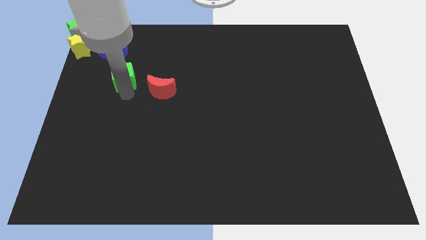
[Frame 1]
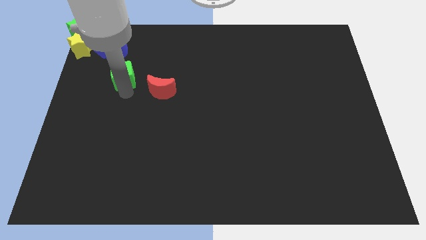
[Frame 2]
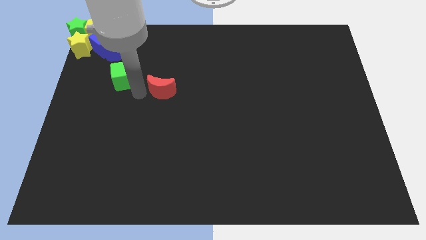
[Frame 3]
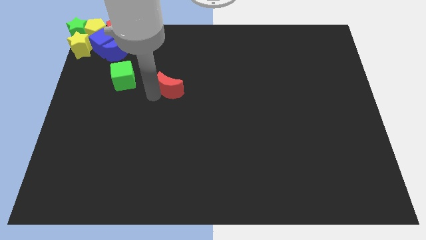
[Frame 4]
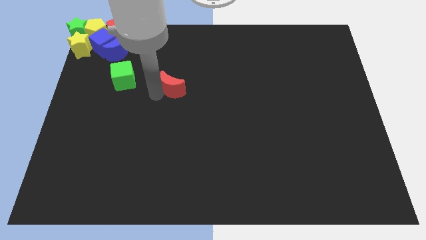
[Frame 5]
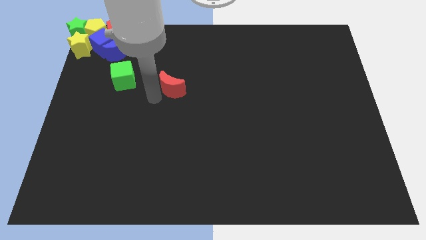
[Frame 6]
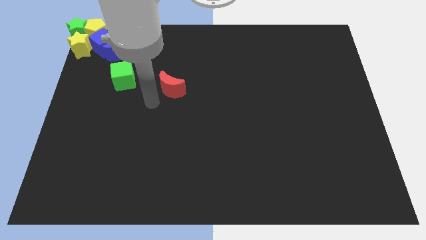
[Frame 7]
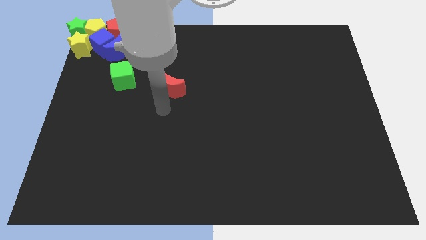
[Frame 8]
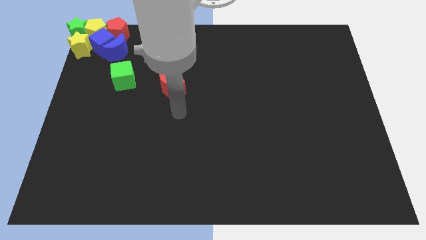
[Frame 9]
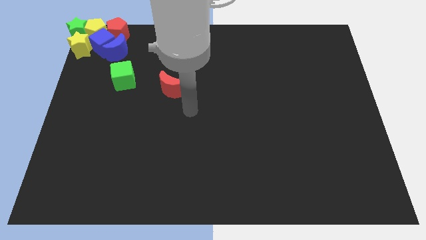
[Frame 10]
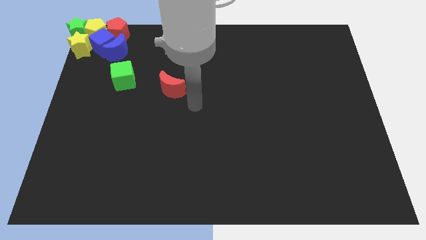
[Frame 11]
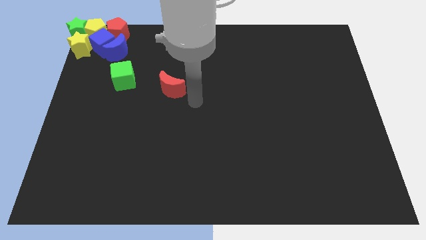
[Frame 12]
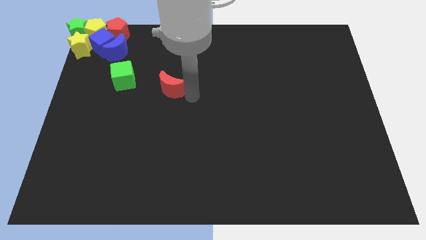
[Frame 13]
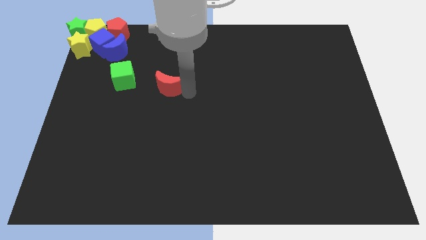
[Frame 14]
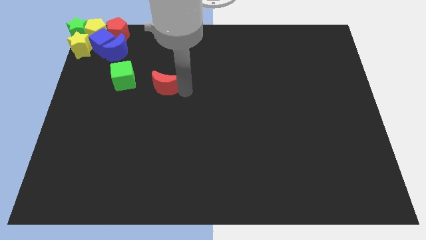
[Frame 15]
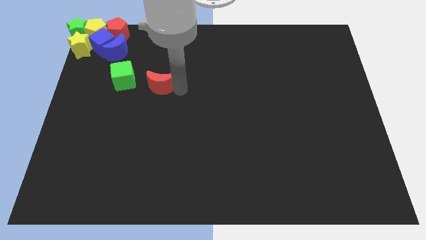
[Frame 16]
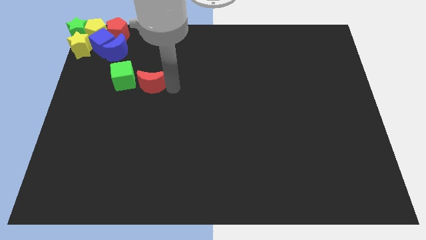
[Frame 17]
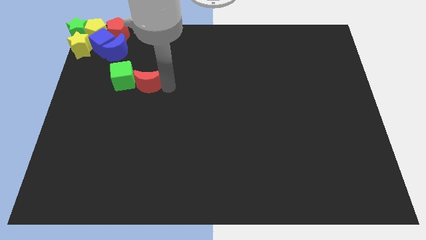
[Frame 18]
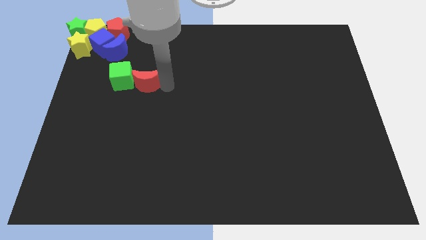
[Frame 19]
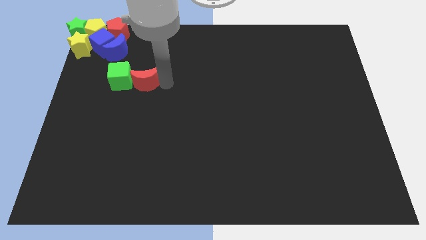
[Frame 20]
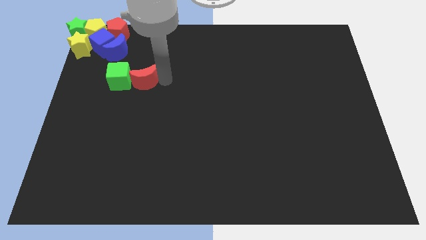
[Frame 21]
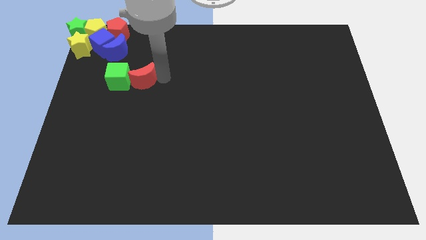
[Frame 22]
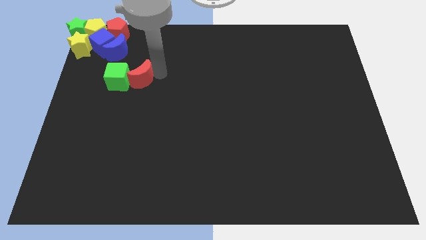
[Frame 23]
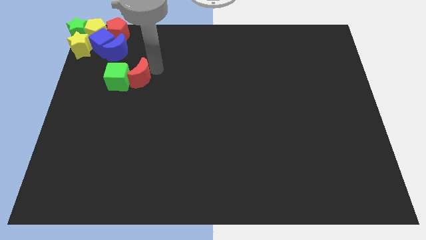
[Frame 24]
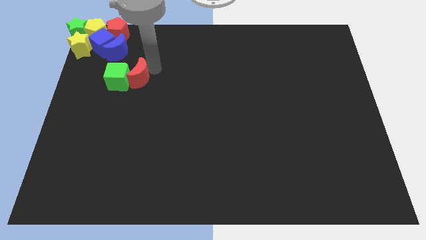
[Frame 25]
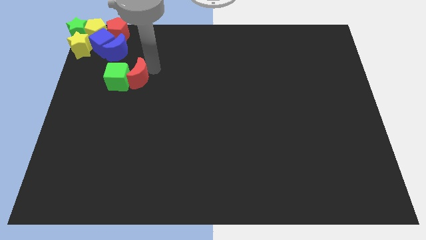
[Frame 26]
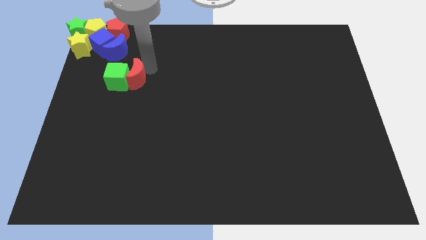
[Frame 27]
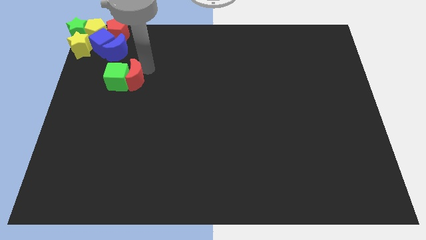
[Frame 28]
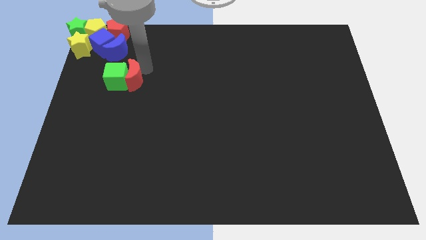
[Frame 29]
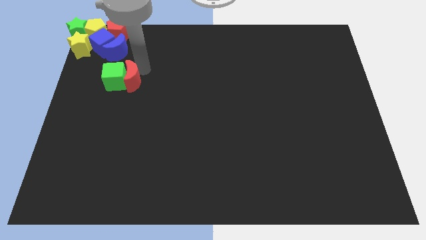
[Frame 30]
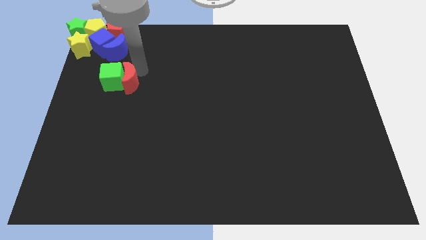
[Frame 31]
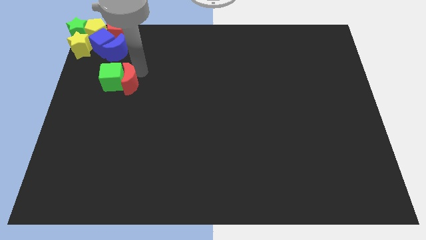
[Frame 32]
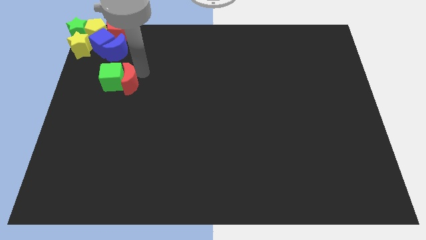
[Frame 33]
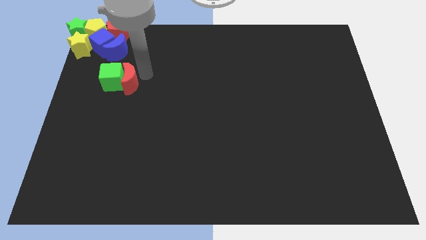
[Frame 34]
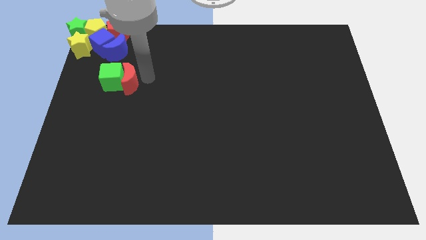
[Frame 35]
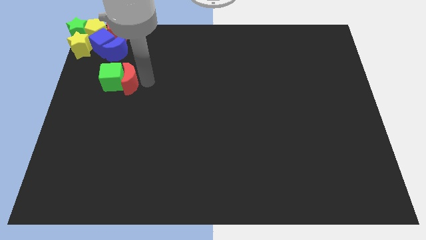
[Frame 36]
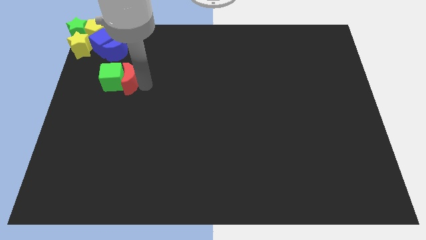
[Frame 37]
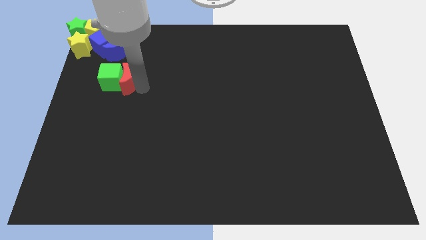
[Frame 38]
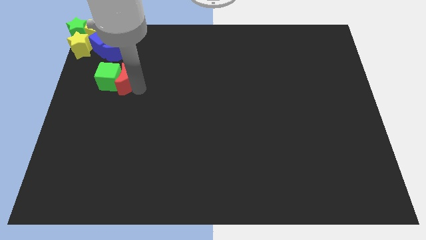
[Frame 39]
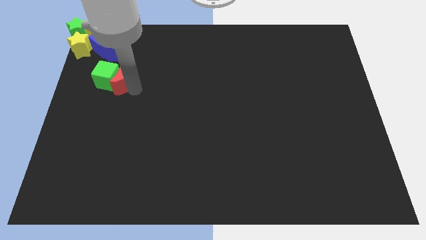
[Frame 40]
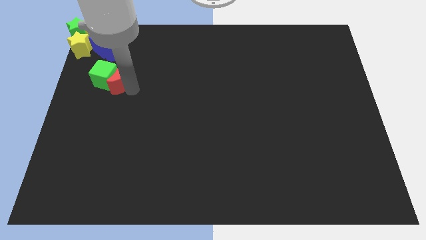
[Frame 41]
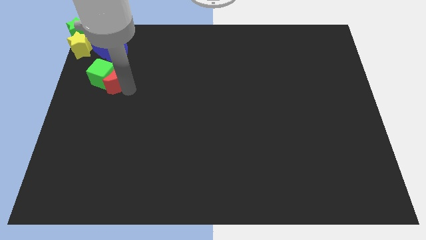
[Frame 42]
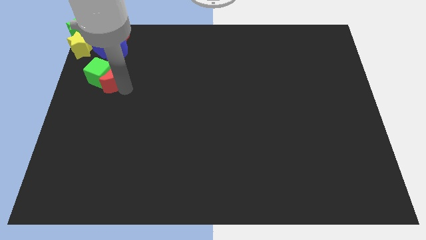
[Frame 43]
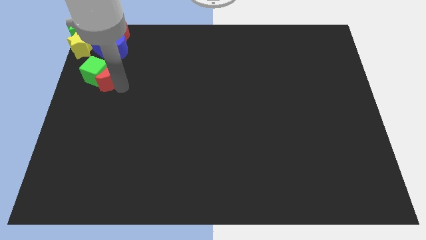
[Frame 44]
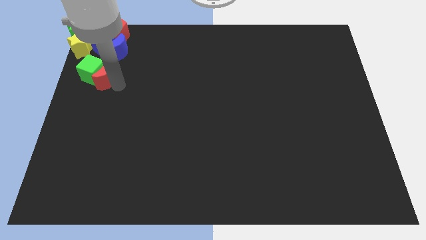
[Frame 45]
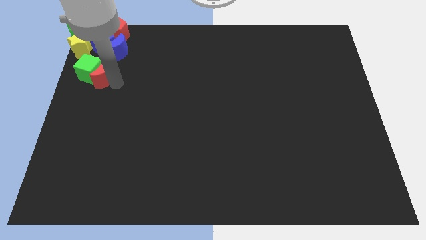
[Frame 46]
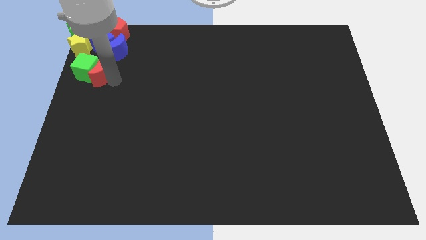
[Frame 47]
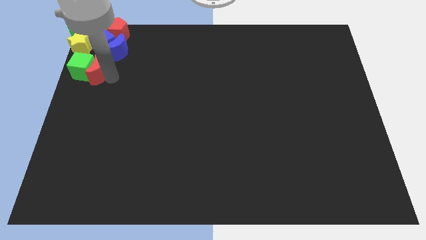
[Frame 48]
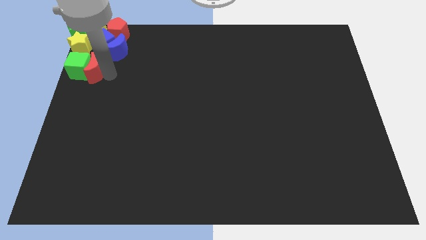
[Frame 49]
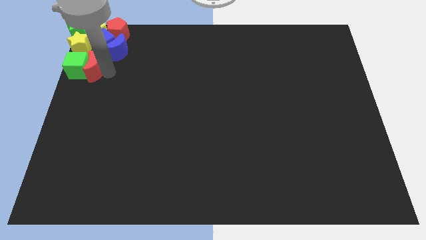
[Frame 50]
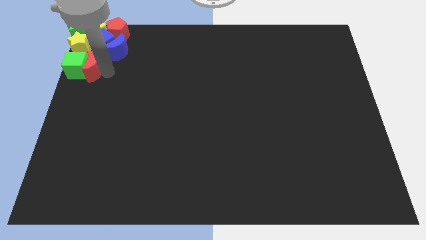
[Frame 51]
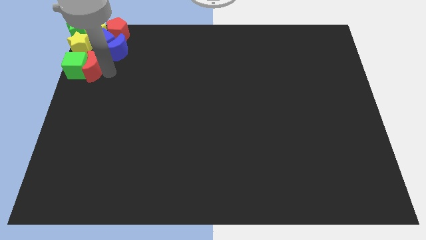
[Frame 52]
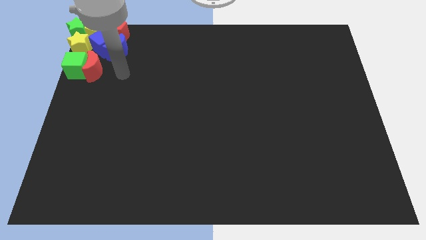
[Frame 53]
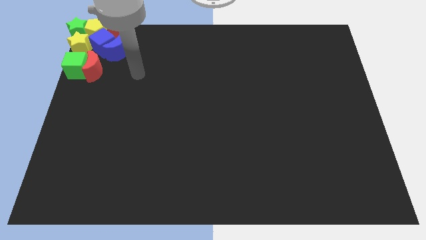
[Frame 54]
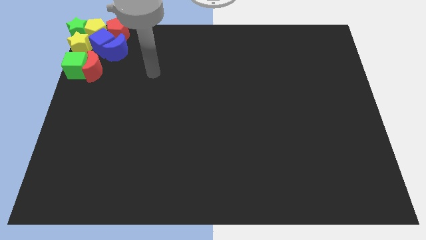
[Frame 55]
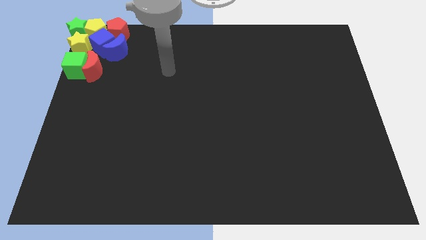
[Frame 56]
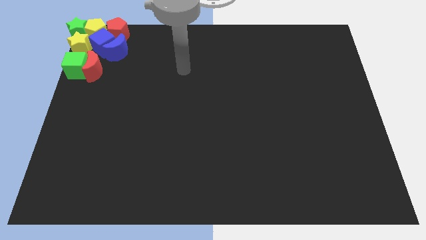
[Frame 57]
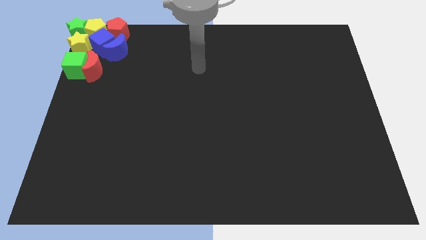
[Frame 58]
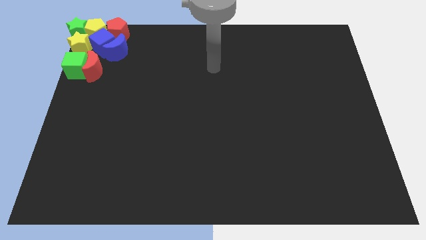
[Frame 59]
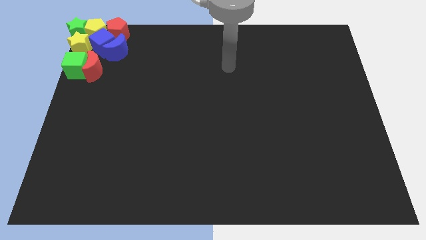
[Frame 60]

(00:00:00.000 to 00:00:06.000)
slide the red crescent and green cube to the bottom side of the yellow star

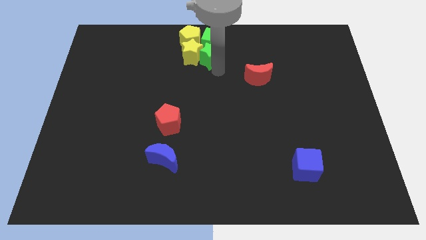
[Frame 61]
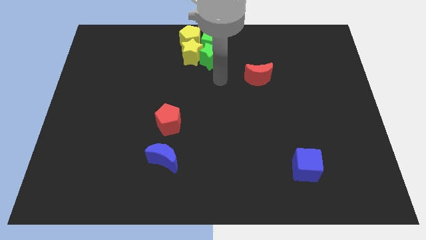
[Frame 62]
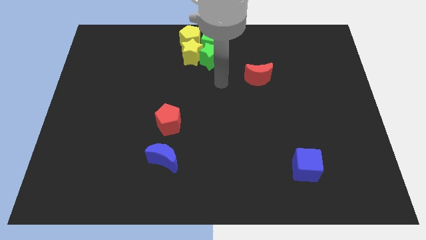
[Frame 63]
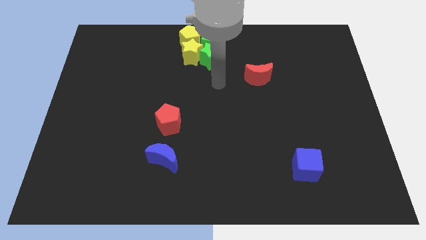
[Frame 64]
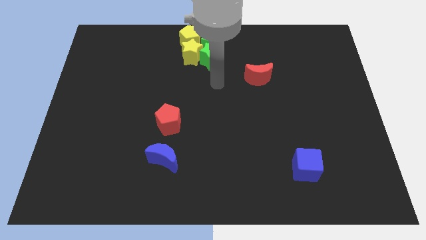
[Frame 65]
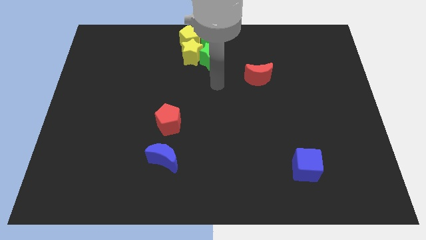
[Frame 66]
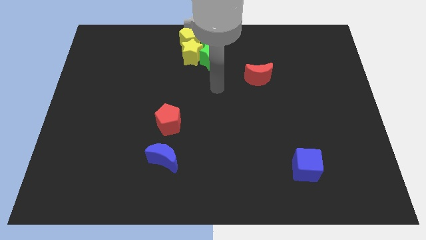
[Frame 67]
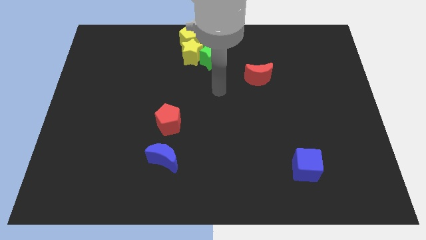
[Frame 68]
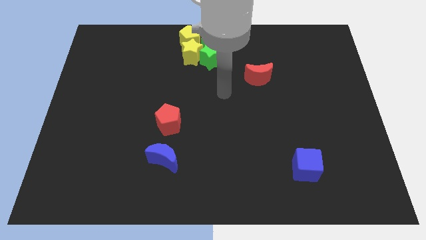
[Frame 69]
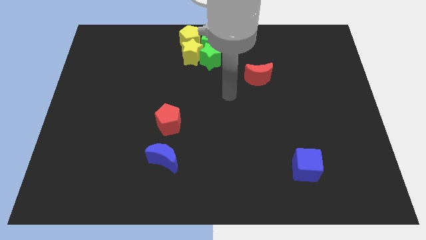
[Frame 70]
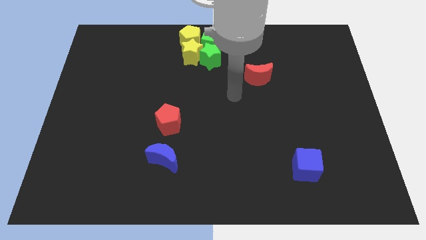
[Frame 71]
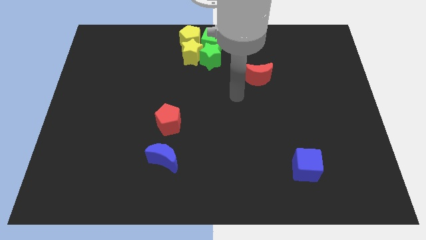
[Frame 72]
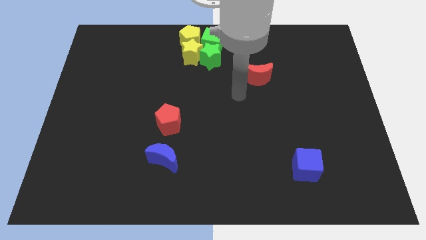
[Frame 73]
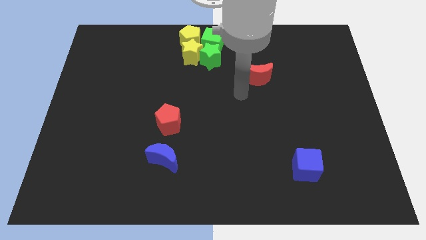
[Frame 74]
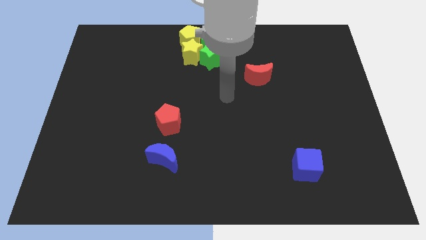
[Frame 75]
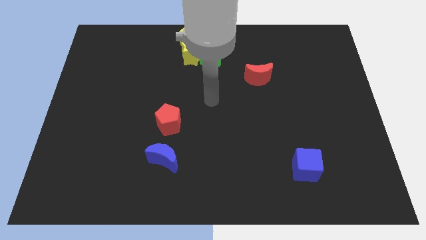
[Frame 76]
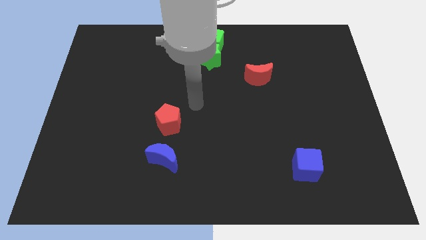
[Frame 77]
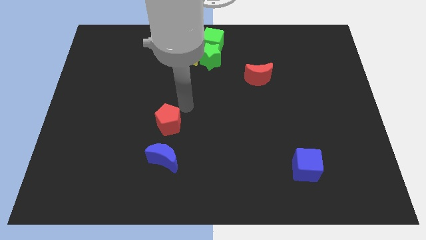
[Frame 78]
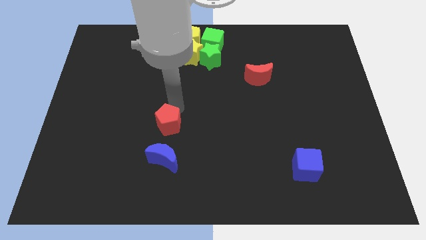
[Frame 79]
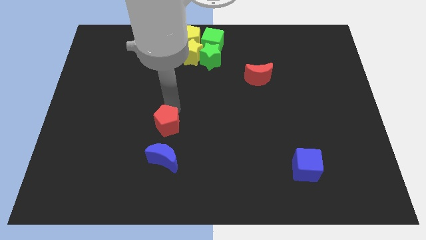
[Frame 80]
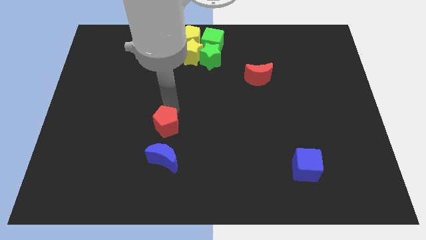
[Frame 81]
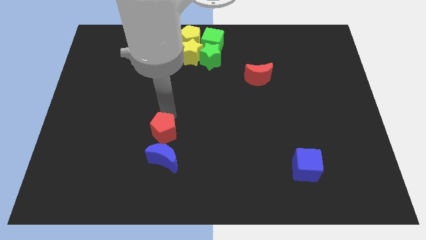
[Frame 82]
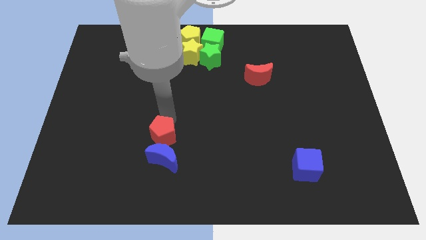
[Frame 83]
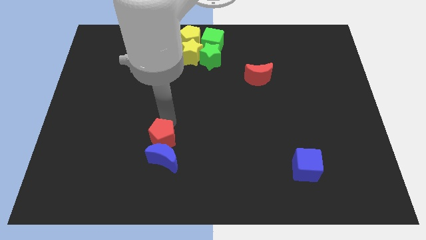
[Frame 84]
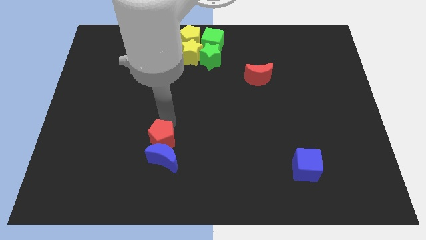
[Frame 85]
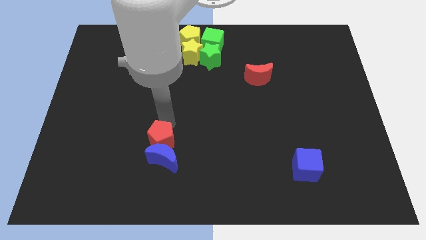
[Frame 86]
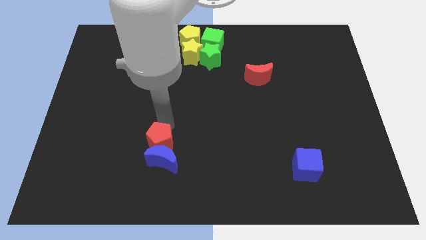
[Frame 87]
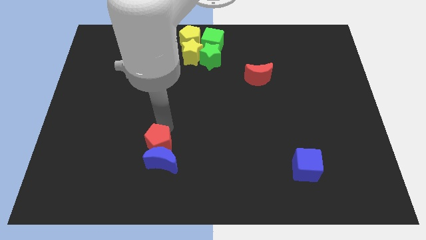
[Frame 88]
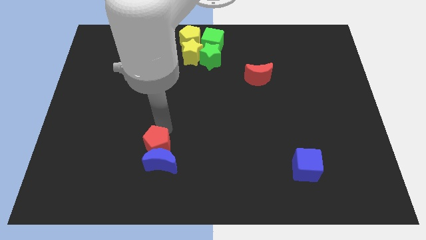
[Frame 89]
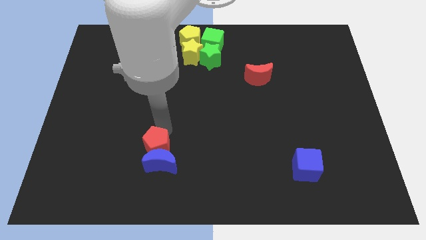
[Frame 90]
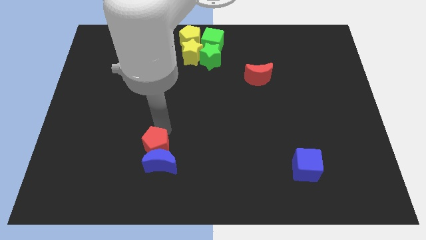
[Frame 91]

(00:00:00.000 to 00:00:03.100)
move red pentagon into blue moon
